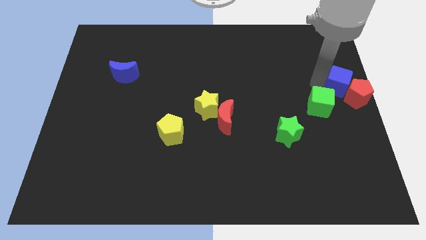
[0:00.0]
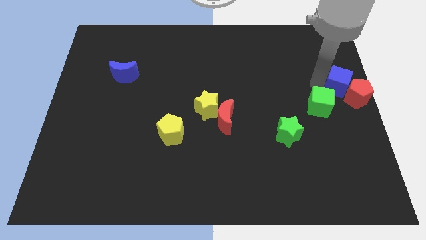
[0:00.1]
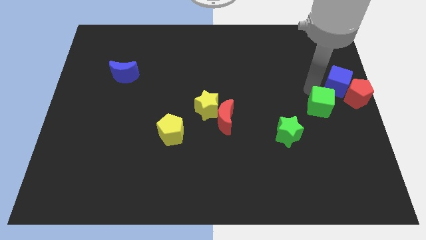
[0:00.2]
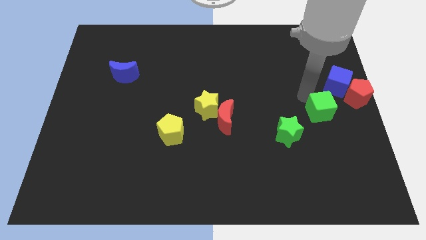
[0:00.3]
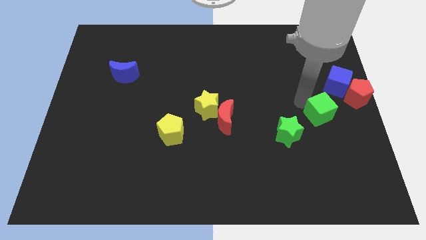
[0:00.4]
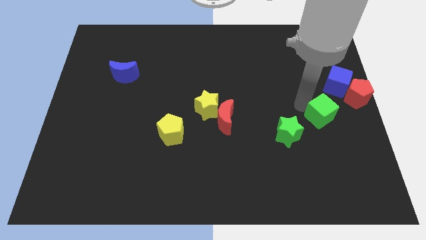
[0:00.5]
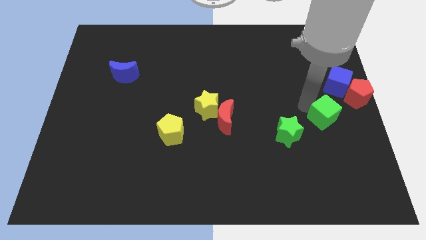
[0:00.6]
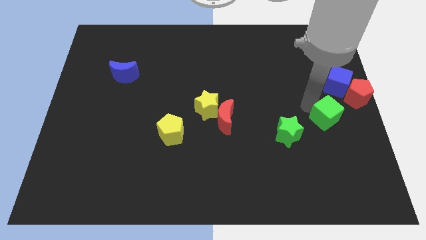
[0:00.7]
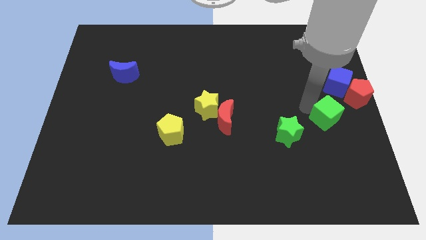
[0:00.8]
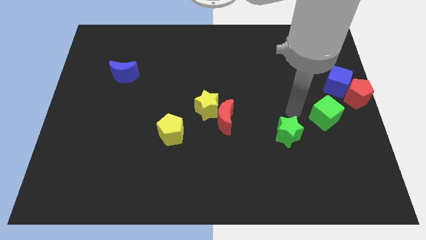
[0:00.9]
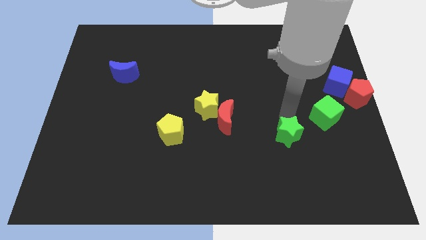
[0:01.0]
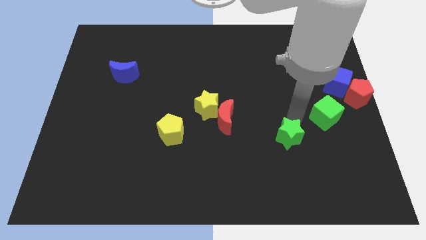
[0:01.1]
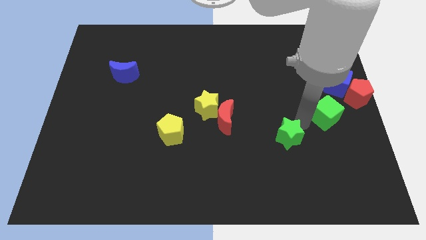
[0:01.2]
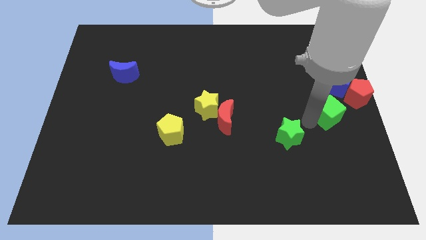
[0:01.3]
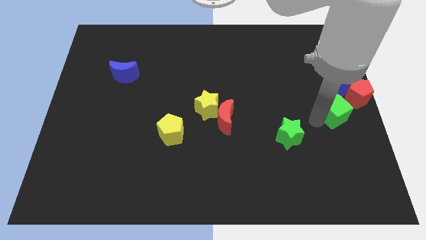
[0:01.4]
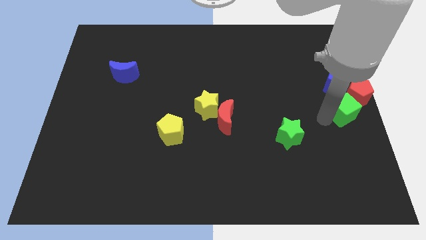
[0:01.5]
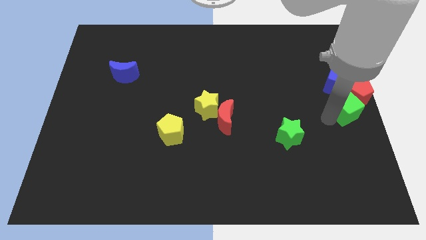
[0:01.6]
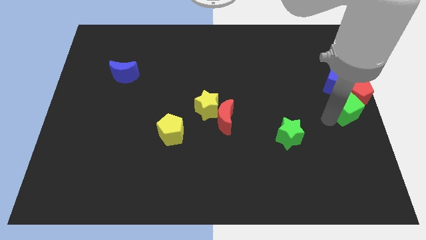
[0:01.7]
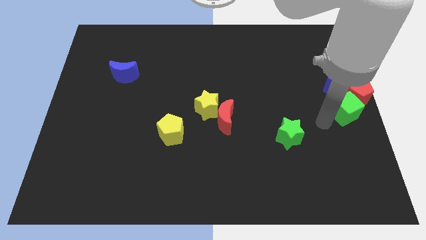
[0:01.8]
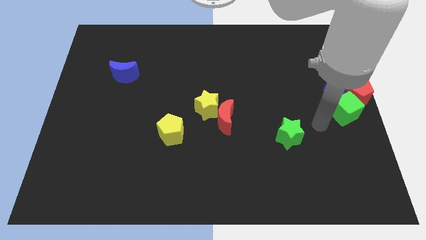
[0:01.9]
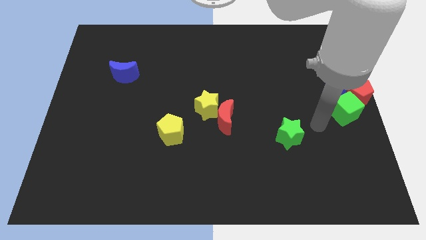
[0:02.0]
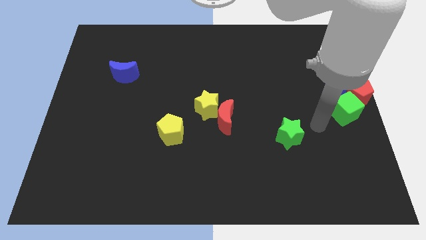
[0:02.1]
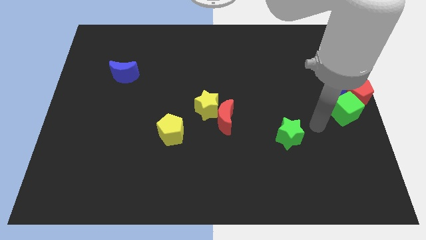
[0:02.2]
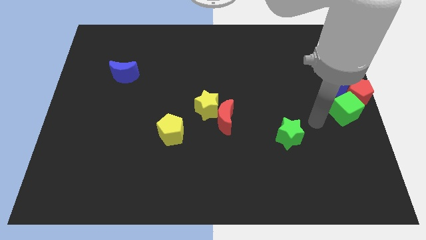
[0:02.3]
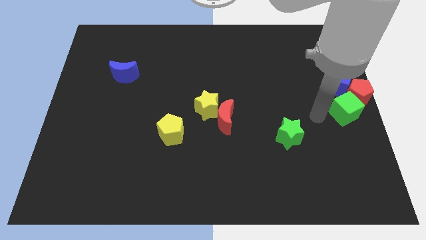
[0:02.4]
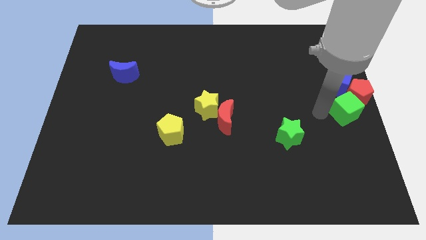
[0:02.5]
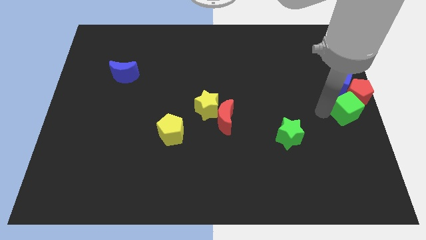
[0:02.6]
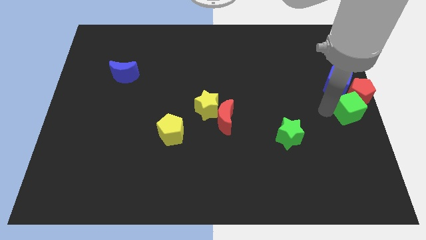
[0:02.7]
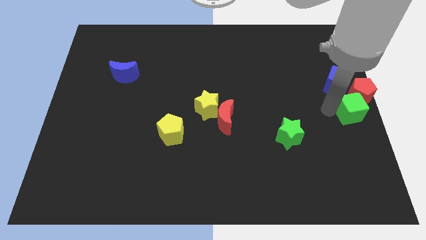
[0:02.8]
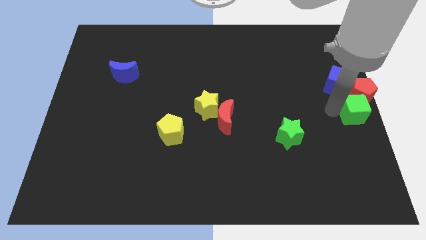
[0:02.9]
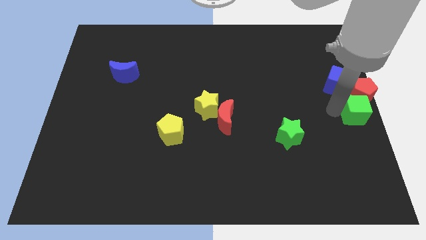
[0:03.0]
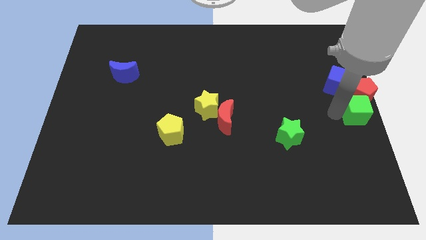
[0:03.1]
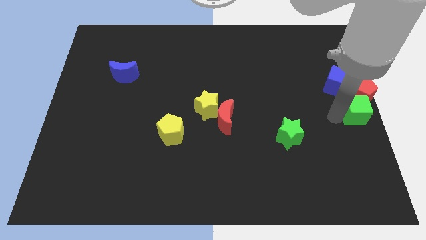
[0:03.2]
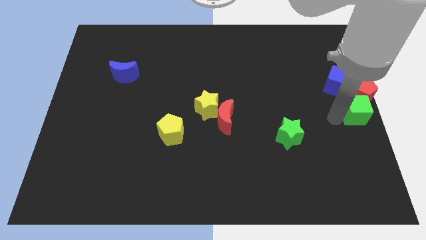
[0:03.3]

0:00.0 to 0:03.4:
push the green cube to the center right

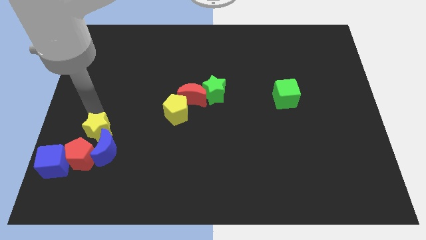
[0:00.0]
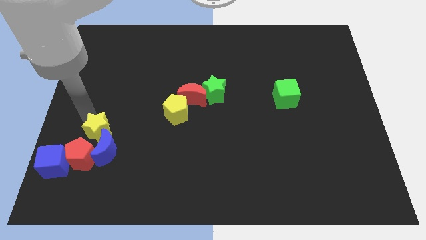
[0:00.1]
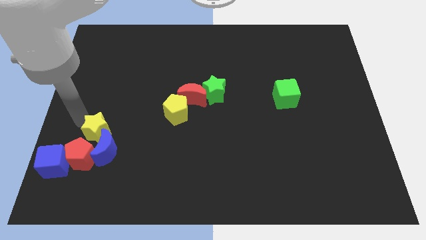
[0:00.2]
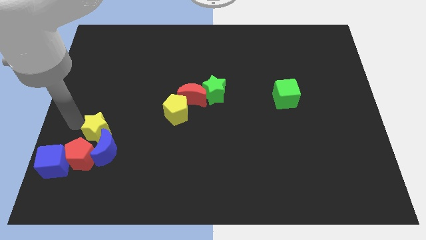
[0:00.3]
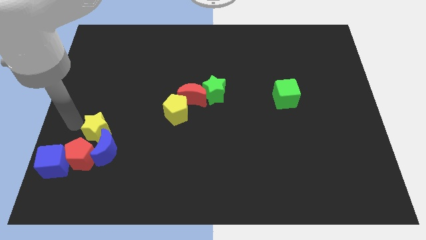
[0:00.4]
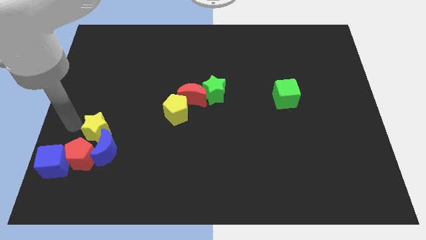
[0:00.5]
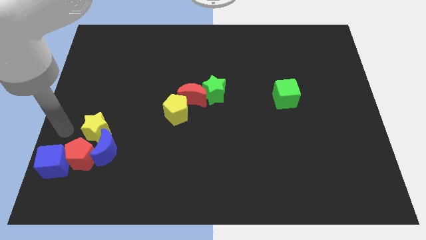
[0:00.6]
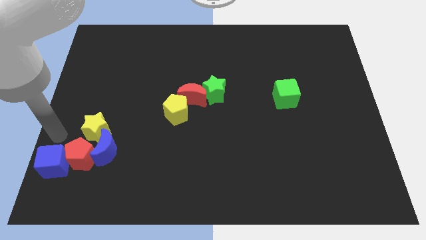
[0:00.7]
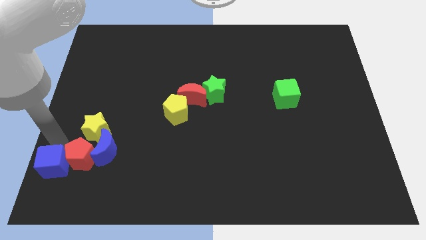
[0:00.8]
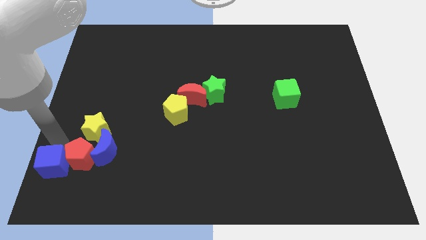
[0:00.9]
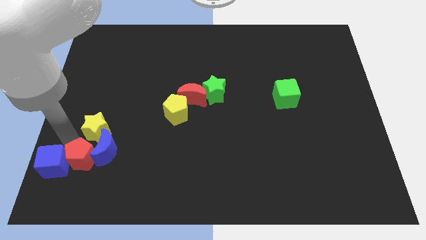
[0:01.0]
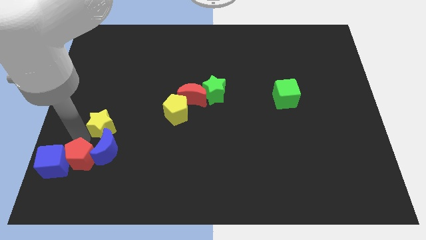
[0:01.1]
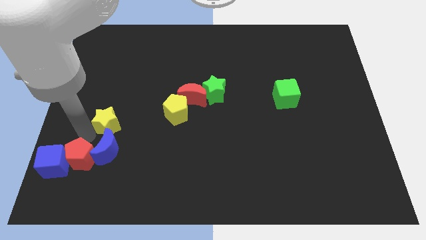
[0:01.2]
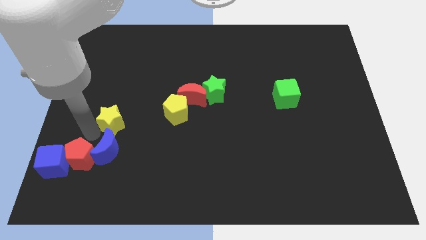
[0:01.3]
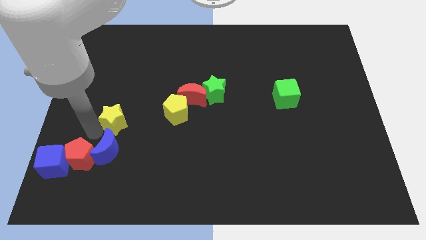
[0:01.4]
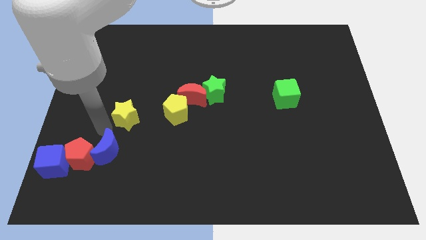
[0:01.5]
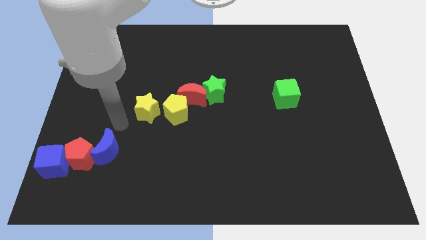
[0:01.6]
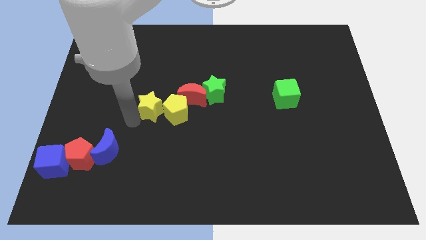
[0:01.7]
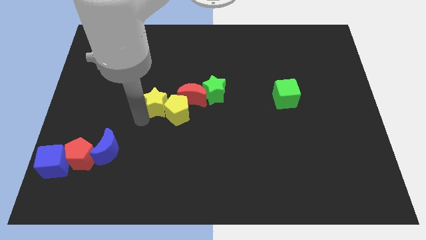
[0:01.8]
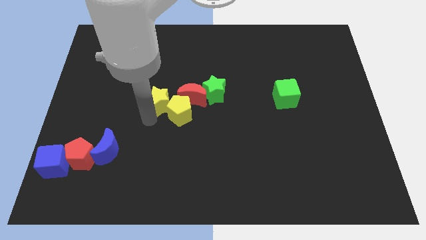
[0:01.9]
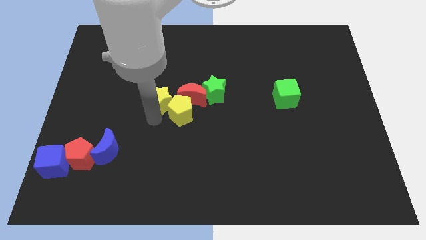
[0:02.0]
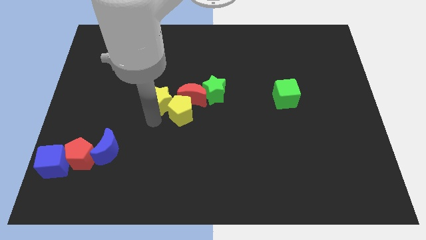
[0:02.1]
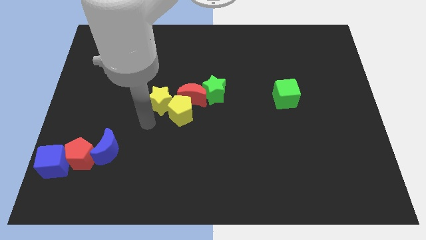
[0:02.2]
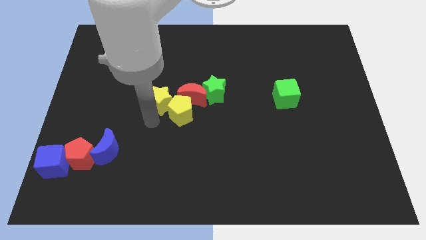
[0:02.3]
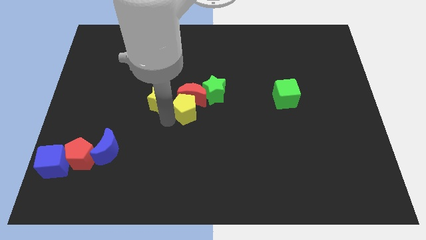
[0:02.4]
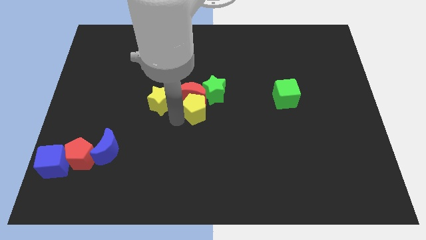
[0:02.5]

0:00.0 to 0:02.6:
push the yellow star towards the center of the board

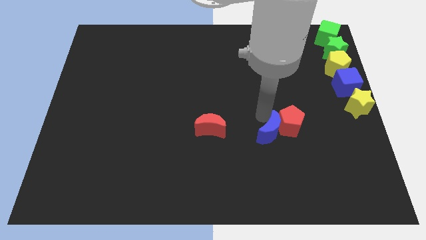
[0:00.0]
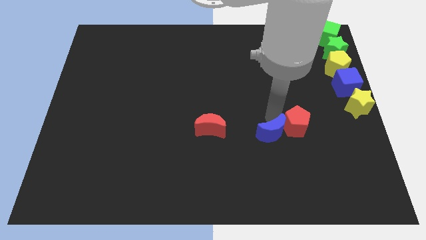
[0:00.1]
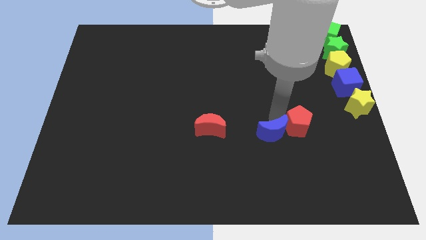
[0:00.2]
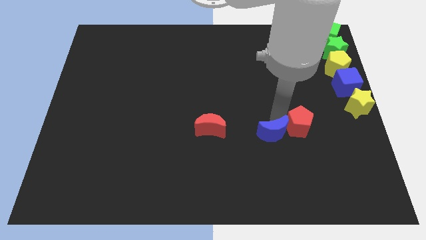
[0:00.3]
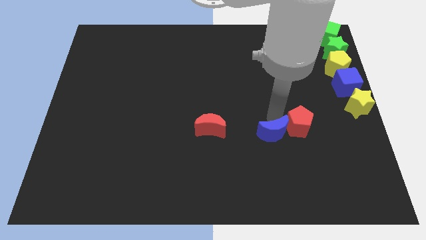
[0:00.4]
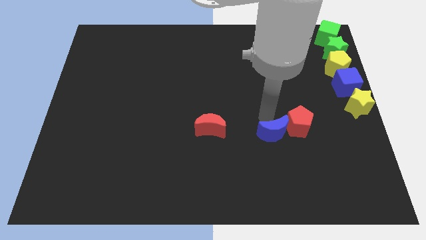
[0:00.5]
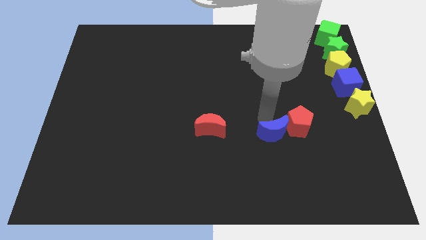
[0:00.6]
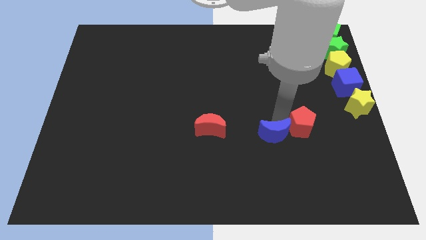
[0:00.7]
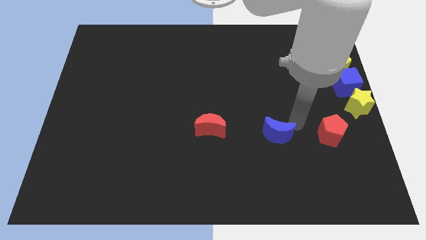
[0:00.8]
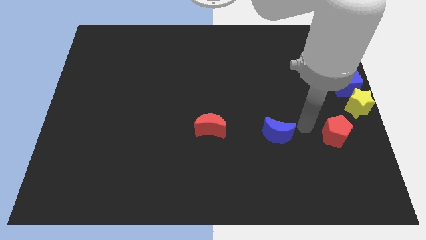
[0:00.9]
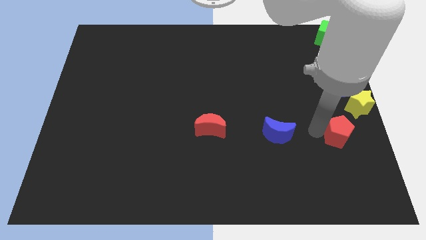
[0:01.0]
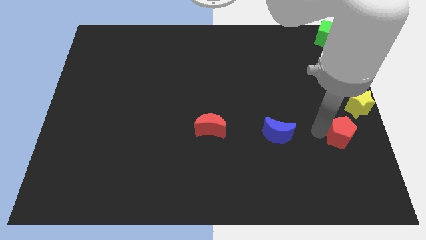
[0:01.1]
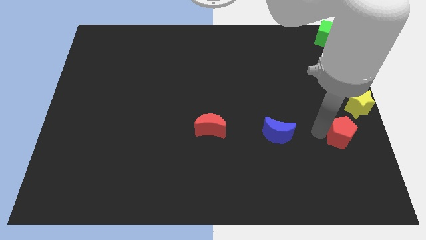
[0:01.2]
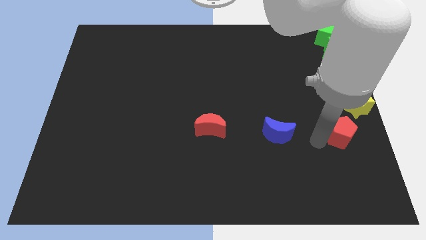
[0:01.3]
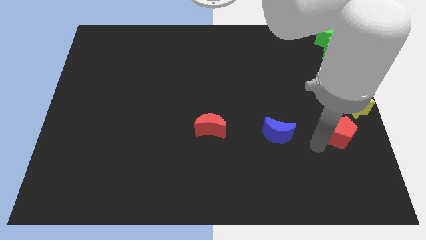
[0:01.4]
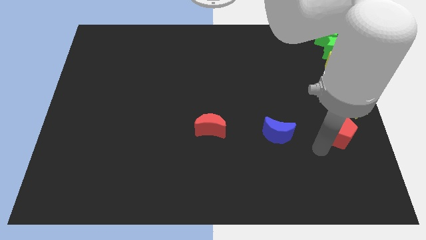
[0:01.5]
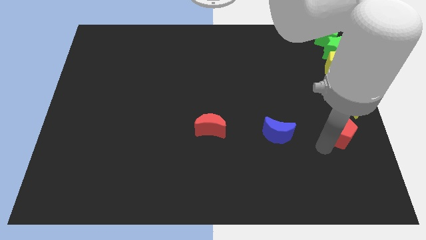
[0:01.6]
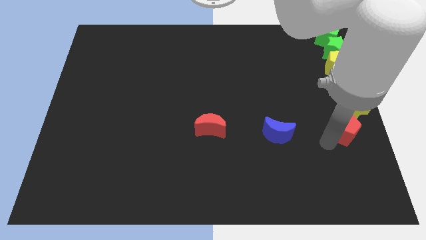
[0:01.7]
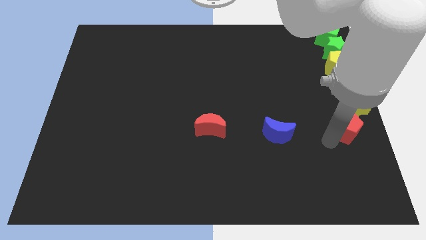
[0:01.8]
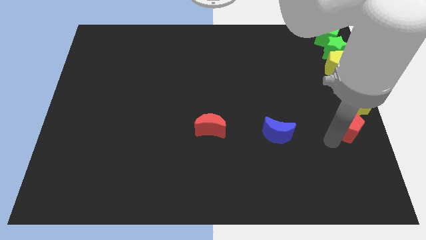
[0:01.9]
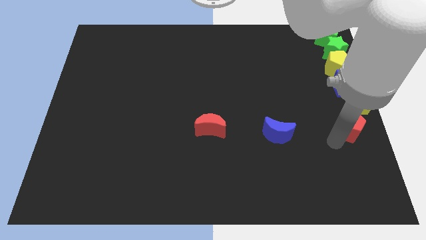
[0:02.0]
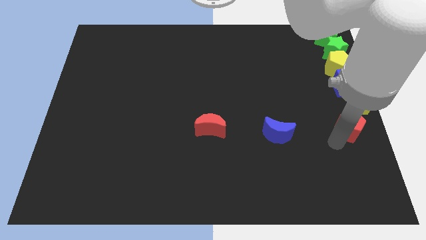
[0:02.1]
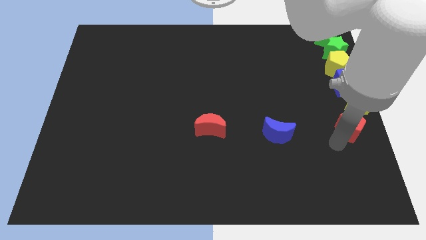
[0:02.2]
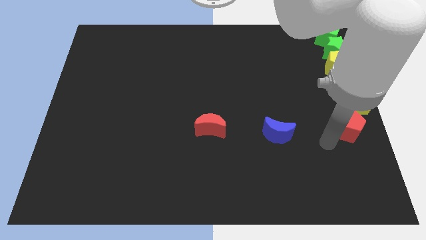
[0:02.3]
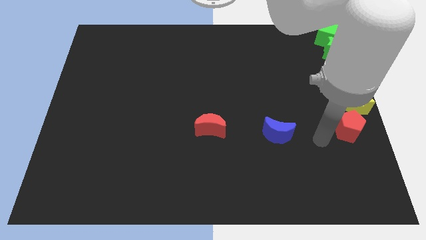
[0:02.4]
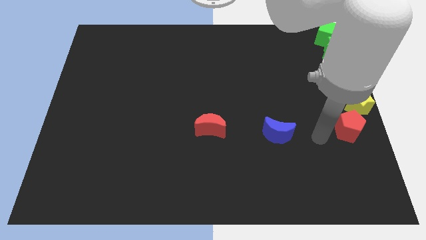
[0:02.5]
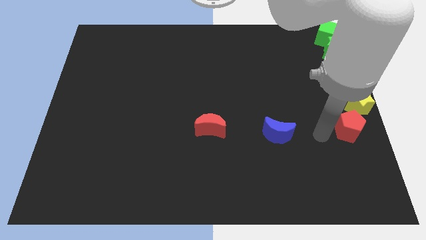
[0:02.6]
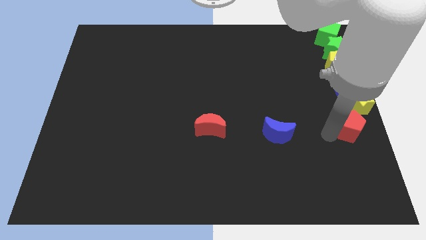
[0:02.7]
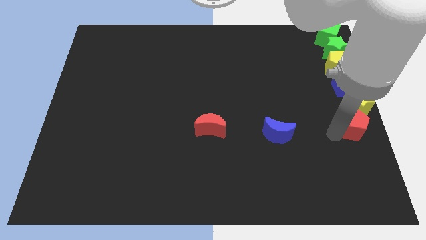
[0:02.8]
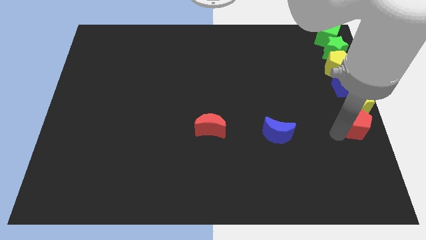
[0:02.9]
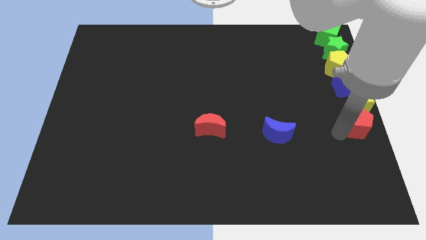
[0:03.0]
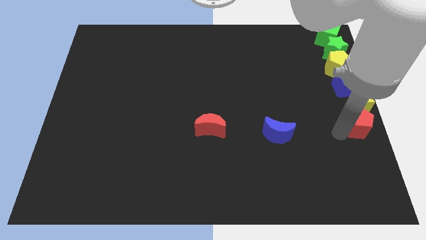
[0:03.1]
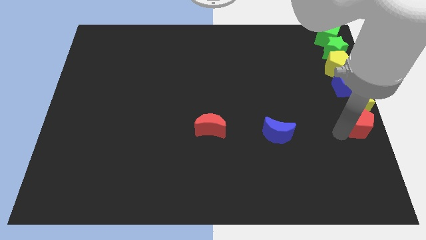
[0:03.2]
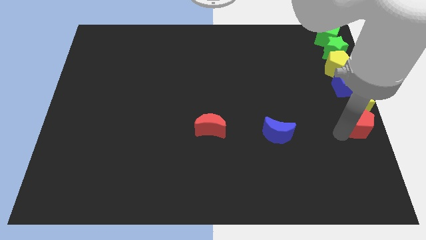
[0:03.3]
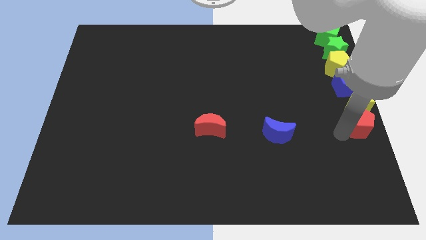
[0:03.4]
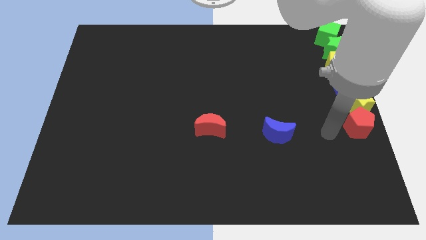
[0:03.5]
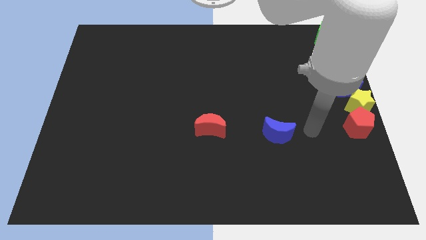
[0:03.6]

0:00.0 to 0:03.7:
place the red pentagon below the yellow star
